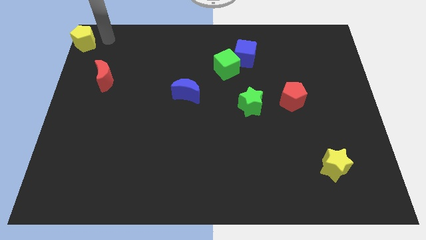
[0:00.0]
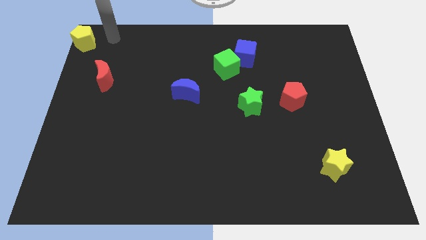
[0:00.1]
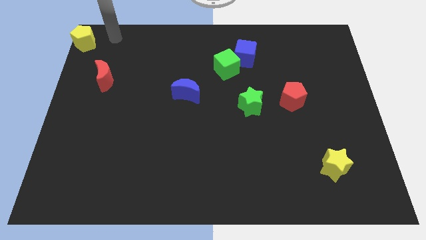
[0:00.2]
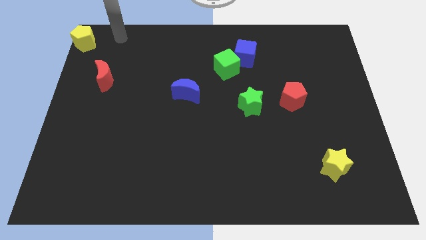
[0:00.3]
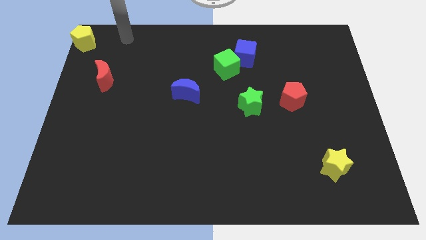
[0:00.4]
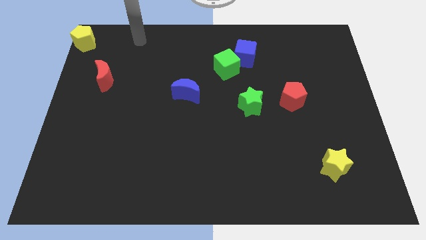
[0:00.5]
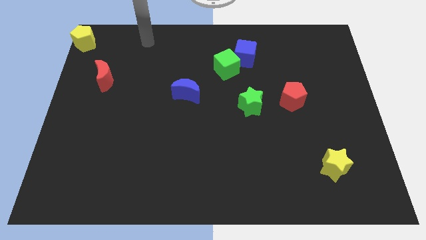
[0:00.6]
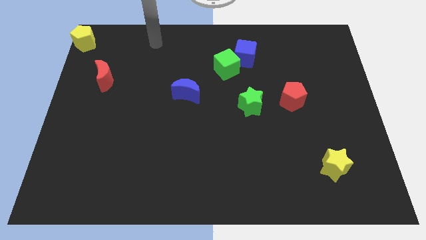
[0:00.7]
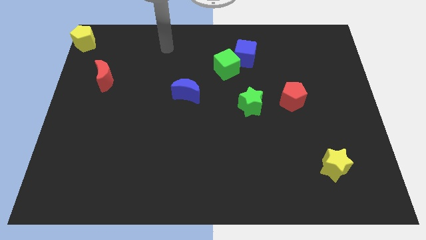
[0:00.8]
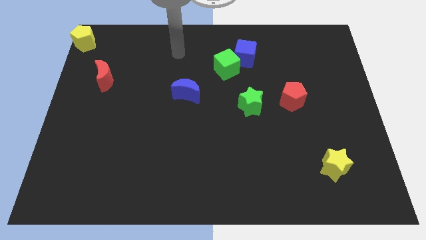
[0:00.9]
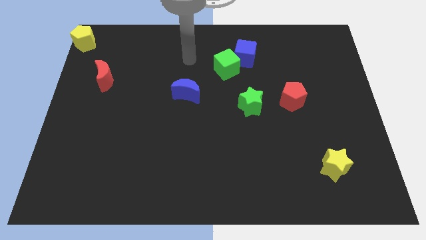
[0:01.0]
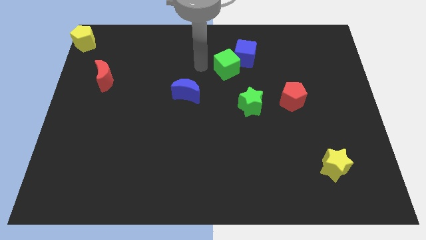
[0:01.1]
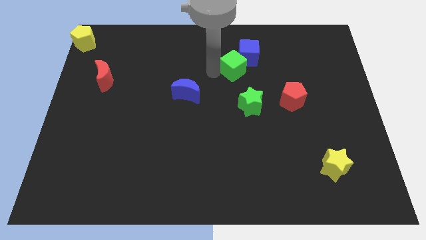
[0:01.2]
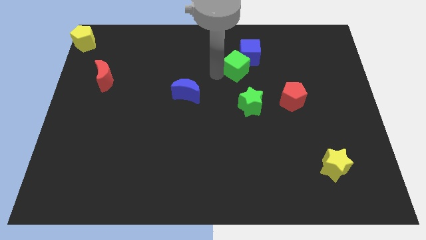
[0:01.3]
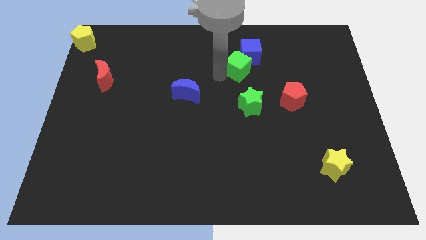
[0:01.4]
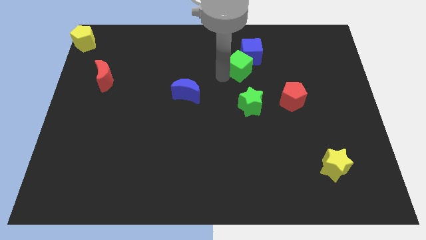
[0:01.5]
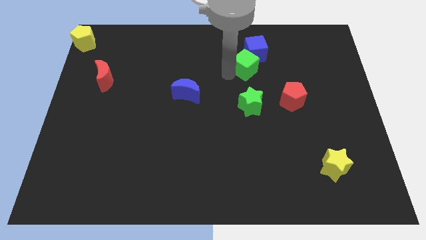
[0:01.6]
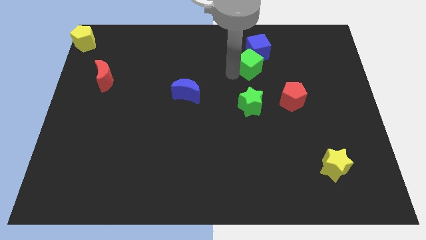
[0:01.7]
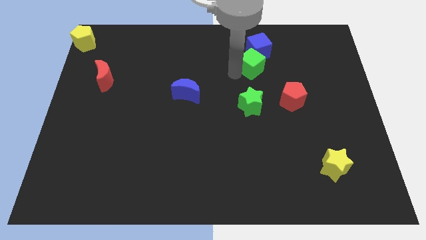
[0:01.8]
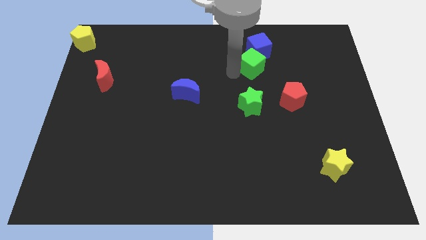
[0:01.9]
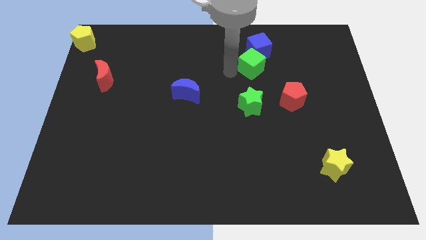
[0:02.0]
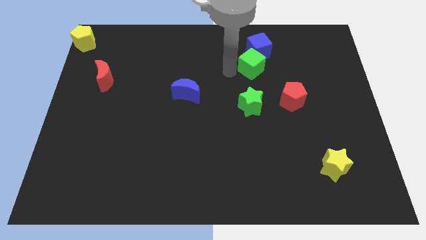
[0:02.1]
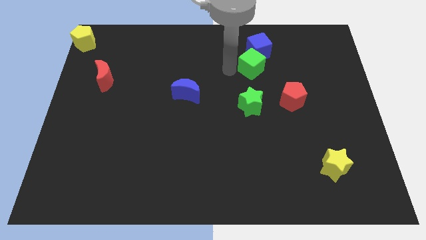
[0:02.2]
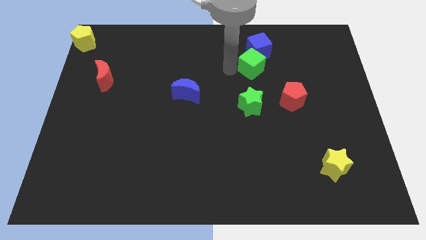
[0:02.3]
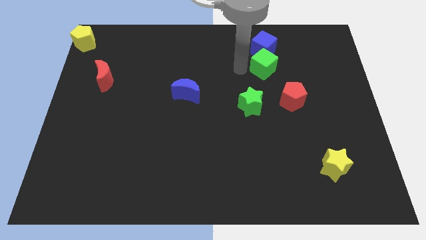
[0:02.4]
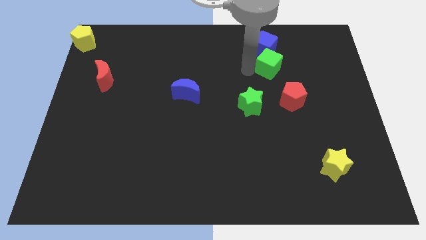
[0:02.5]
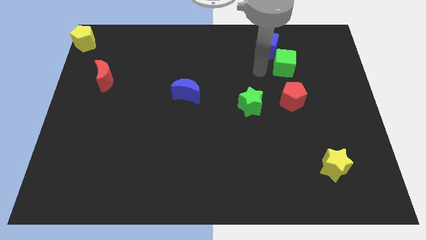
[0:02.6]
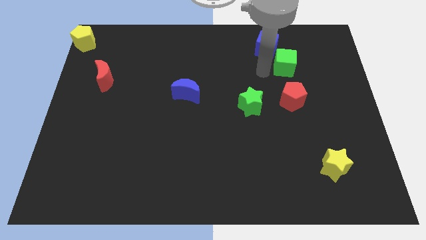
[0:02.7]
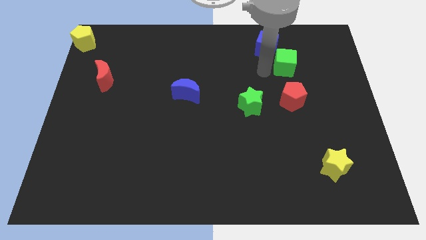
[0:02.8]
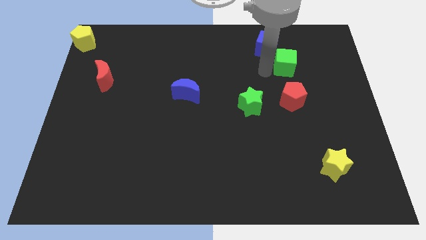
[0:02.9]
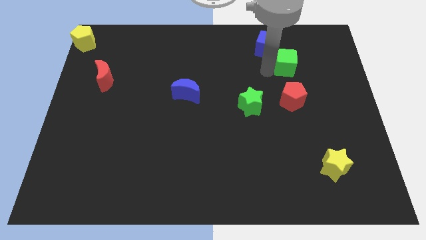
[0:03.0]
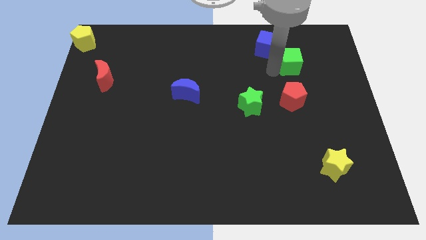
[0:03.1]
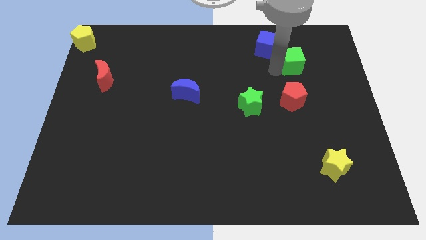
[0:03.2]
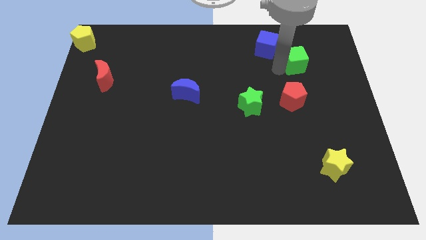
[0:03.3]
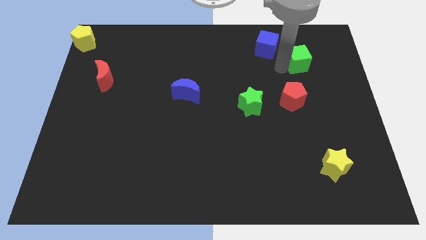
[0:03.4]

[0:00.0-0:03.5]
push the green cube to the top of the red pentagon

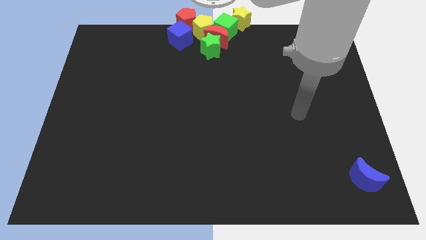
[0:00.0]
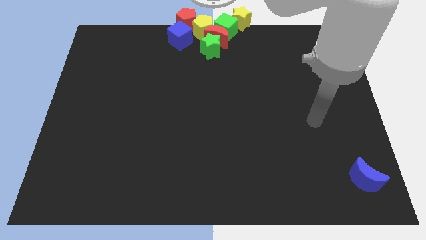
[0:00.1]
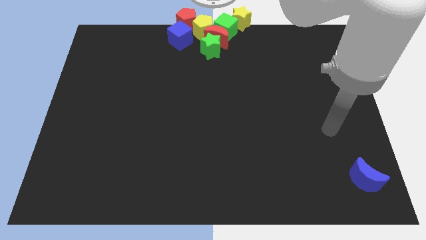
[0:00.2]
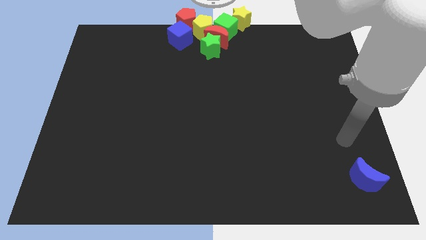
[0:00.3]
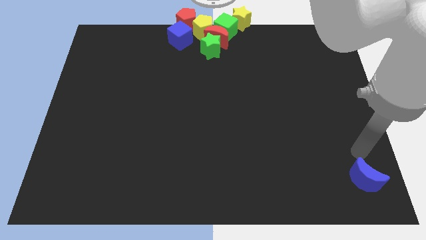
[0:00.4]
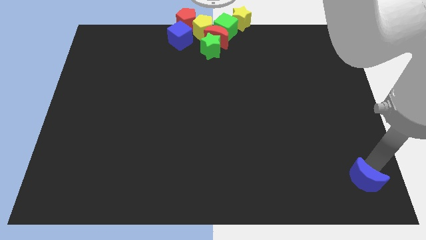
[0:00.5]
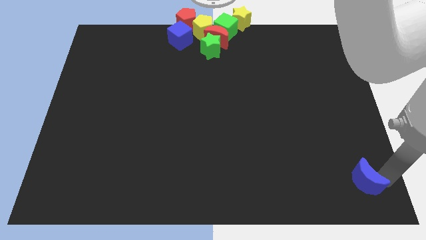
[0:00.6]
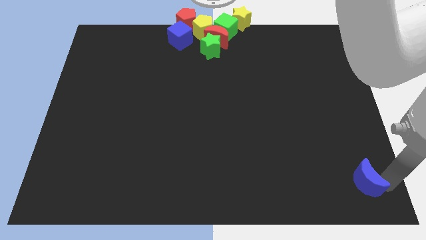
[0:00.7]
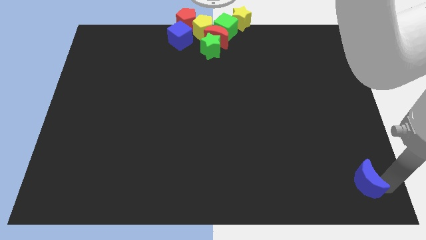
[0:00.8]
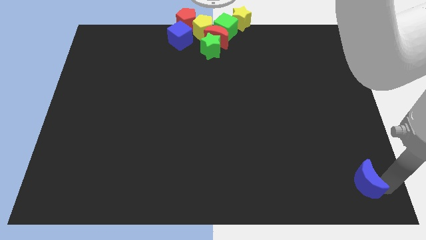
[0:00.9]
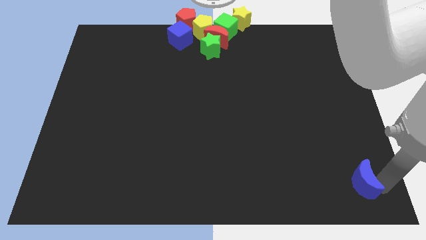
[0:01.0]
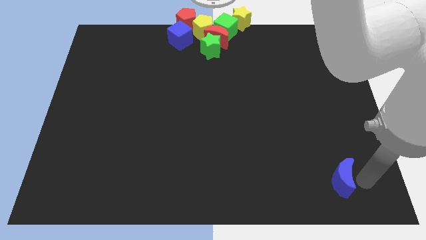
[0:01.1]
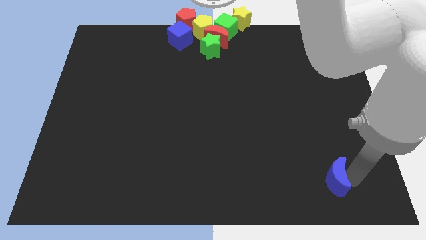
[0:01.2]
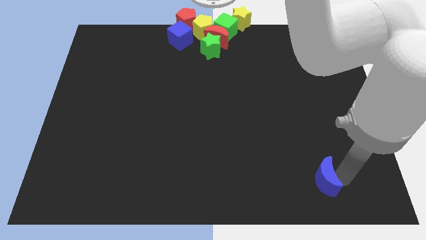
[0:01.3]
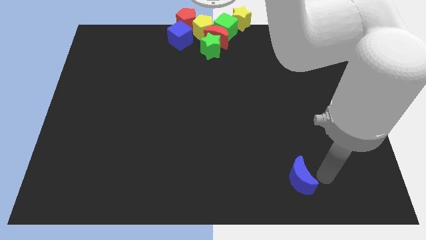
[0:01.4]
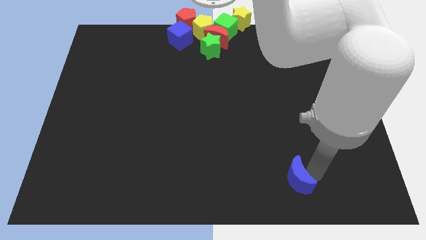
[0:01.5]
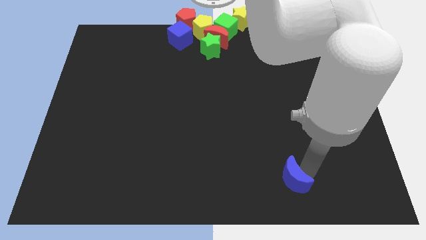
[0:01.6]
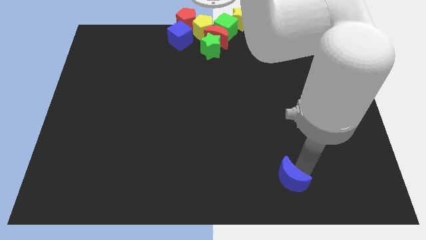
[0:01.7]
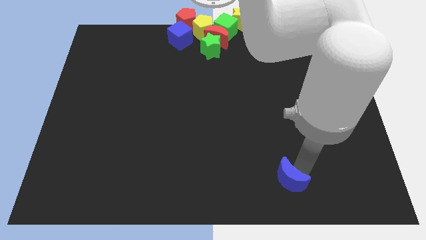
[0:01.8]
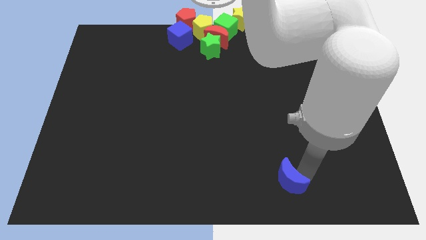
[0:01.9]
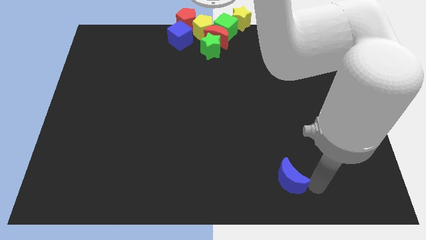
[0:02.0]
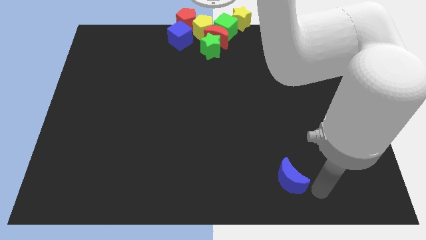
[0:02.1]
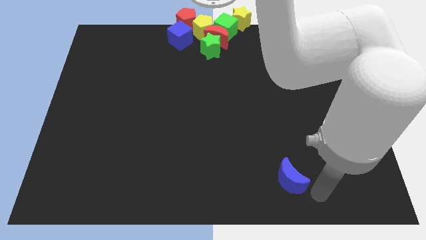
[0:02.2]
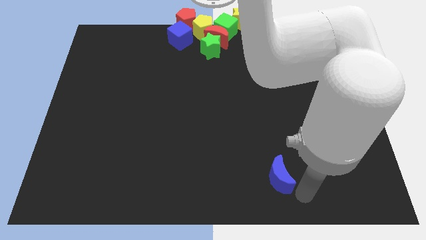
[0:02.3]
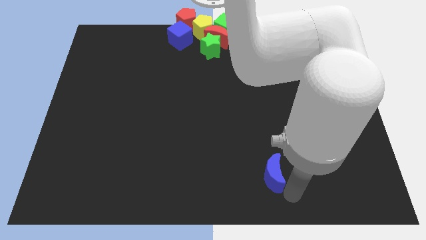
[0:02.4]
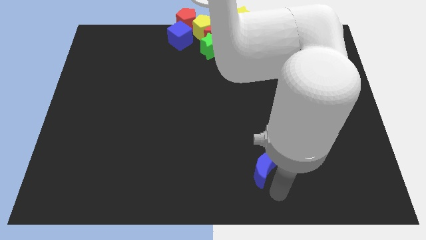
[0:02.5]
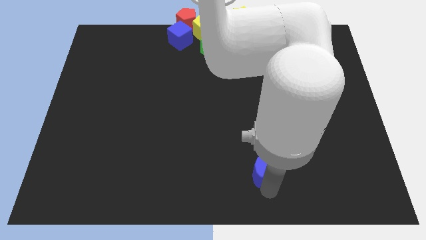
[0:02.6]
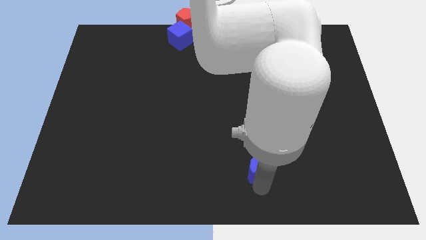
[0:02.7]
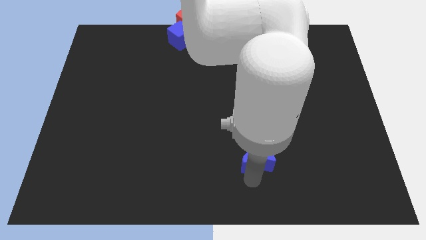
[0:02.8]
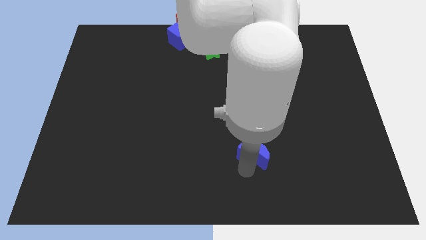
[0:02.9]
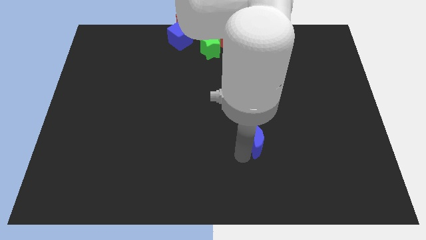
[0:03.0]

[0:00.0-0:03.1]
move the blue moon towards the bottom center

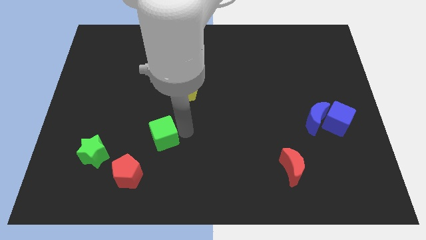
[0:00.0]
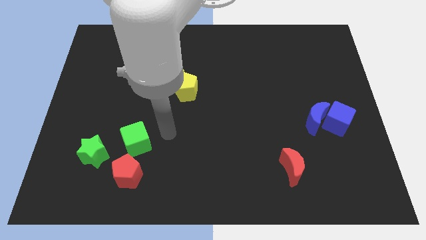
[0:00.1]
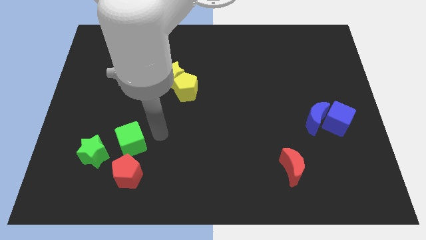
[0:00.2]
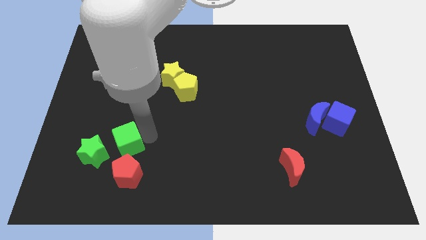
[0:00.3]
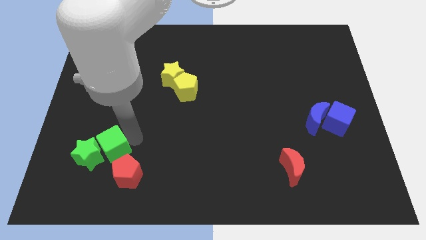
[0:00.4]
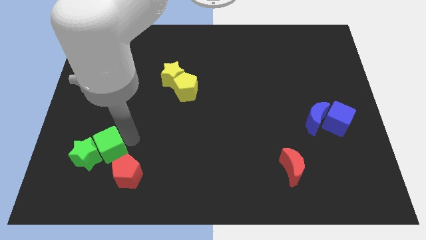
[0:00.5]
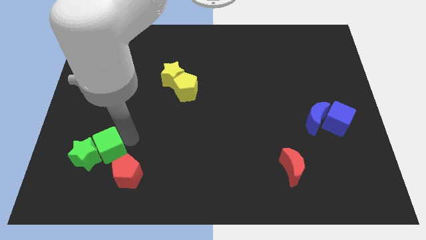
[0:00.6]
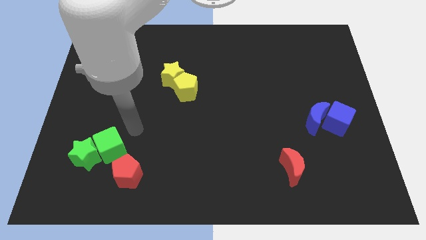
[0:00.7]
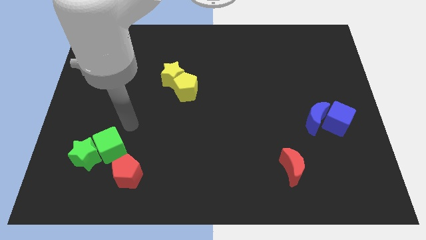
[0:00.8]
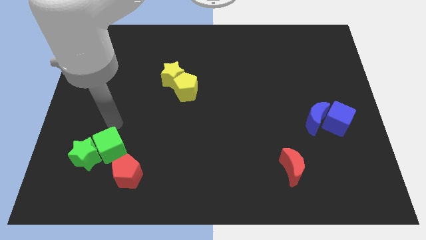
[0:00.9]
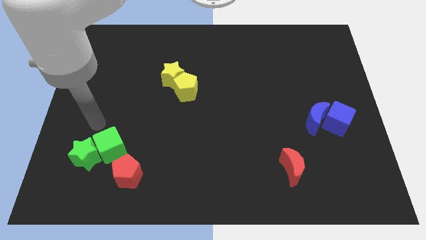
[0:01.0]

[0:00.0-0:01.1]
move the green cube into the green star towards

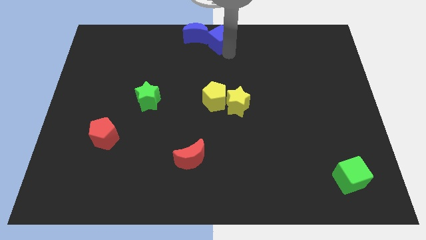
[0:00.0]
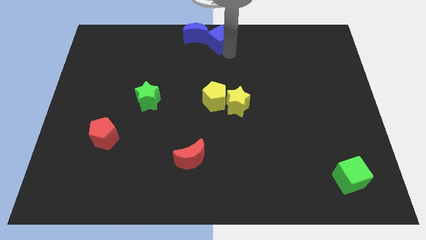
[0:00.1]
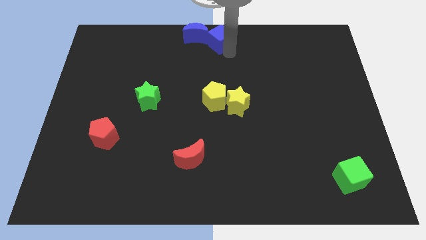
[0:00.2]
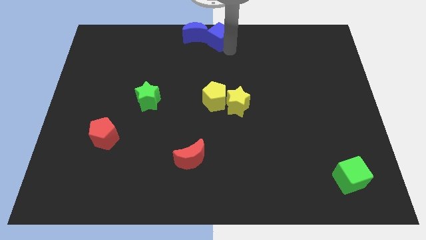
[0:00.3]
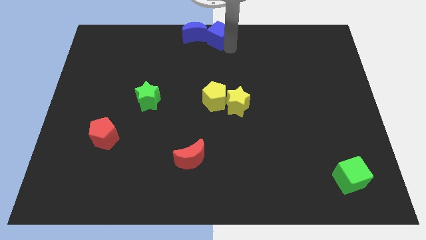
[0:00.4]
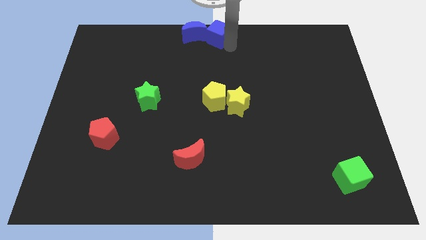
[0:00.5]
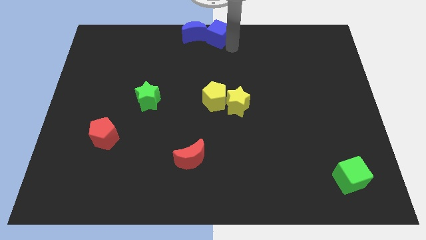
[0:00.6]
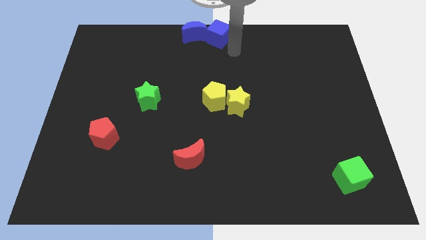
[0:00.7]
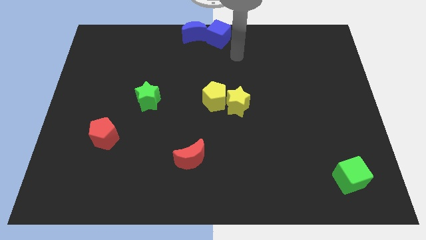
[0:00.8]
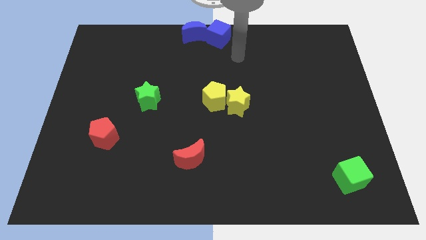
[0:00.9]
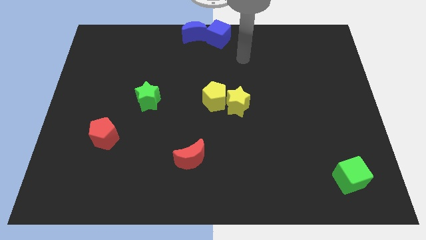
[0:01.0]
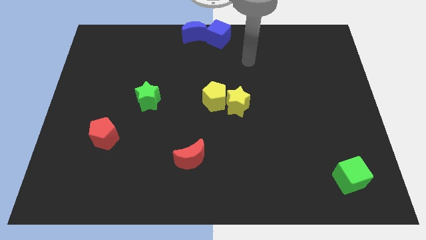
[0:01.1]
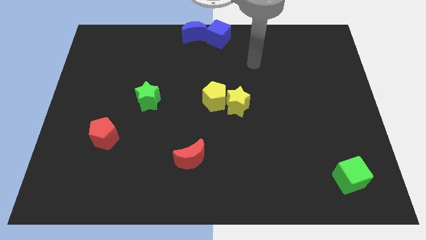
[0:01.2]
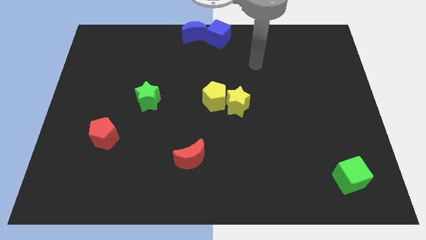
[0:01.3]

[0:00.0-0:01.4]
move the blue cube right to the blue crescent
